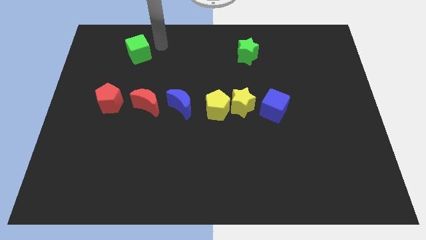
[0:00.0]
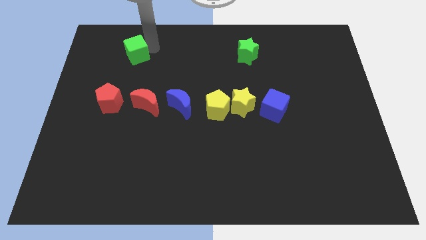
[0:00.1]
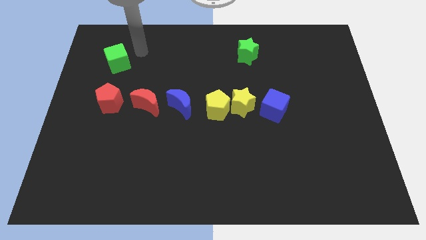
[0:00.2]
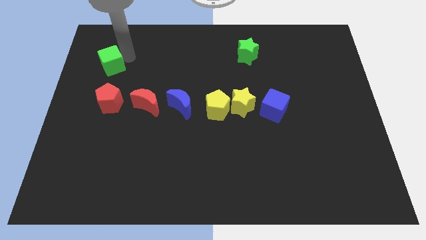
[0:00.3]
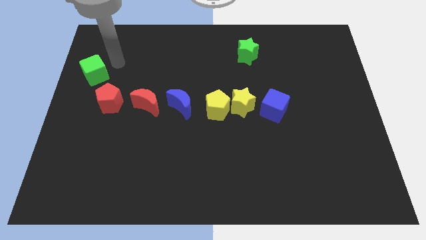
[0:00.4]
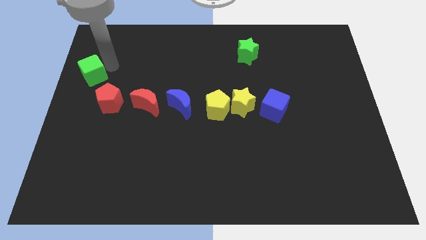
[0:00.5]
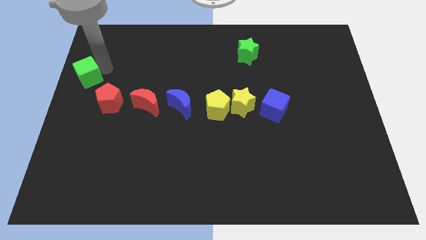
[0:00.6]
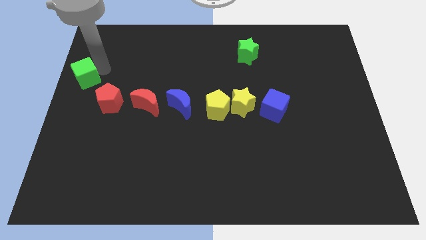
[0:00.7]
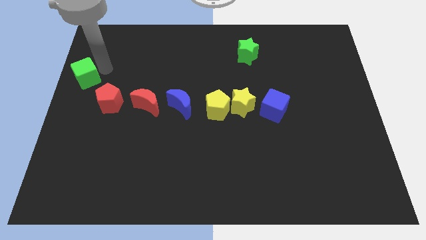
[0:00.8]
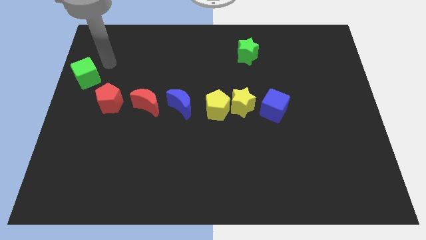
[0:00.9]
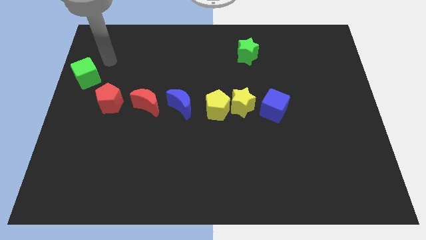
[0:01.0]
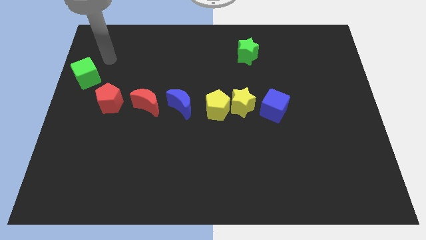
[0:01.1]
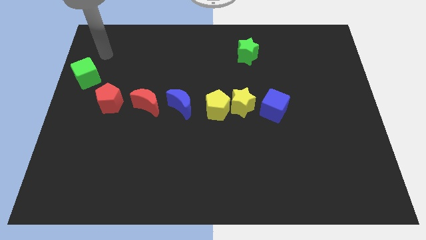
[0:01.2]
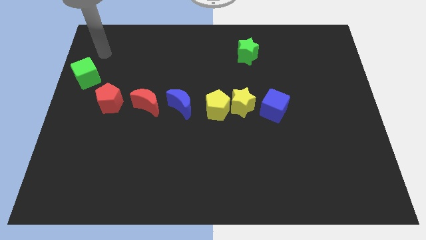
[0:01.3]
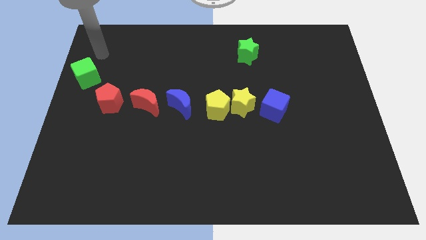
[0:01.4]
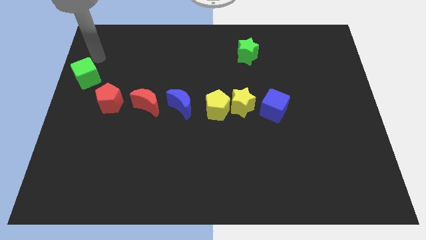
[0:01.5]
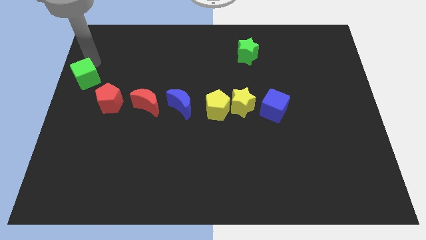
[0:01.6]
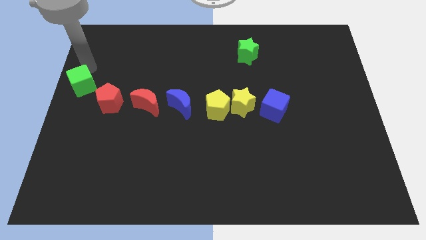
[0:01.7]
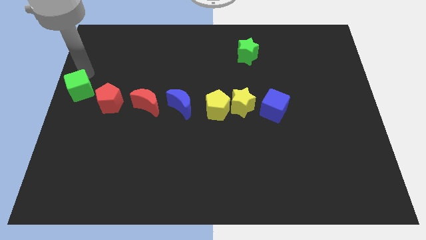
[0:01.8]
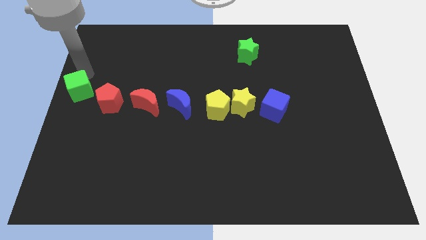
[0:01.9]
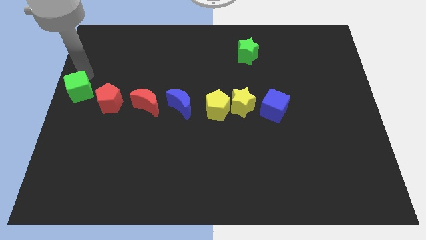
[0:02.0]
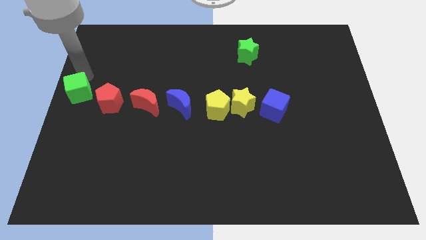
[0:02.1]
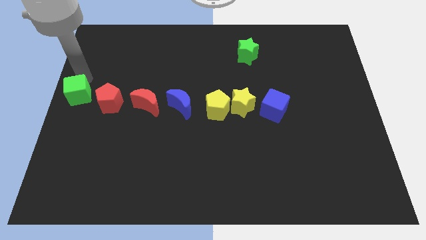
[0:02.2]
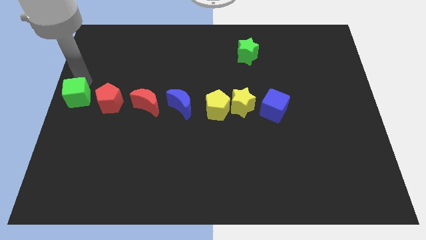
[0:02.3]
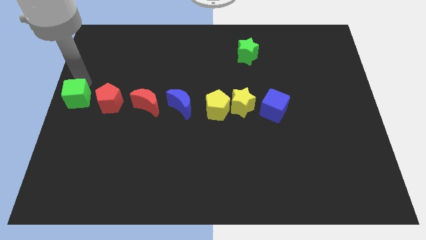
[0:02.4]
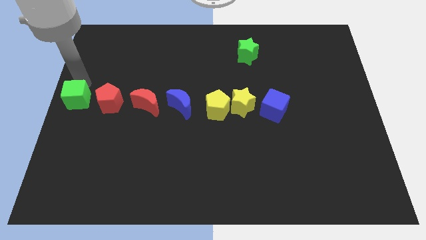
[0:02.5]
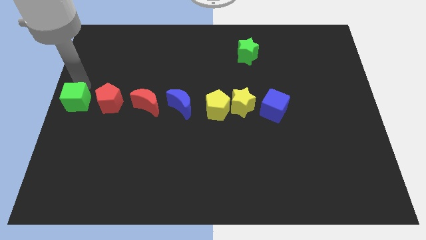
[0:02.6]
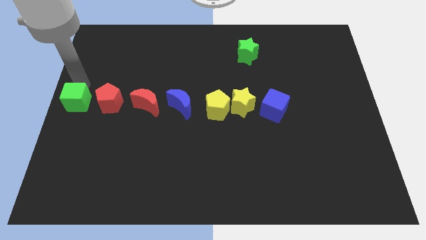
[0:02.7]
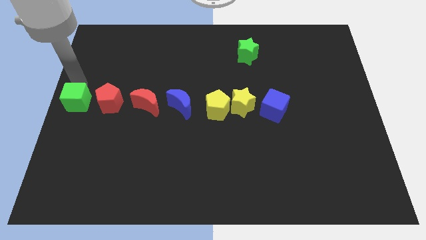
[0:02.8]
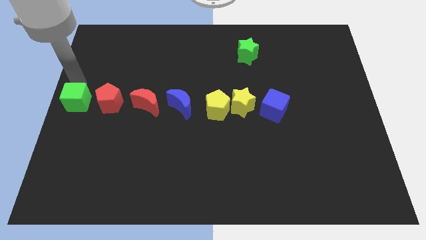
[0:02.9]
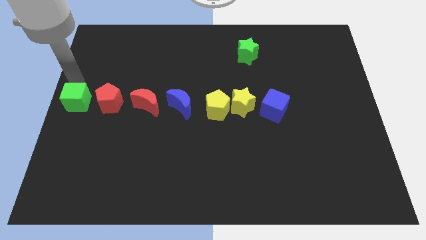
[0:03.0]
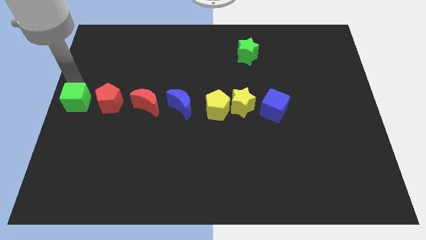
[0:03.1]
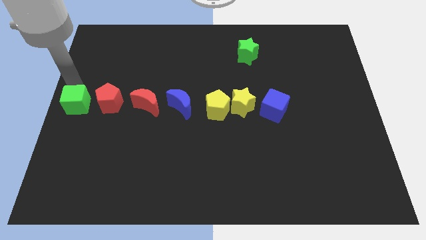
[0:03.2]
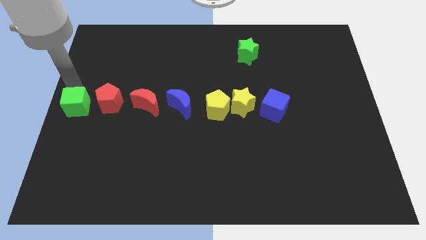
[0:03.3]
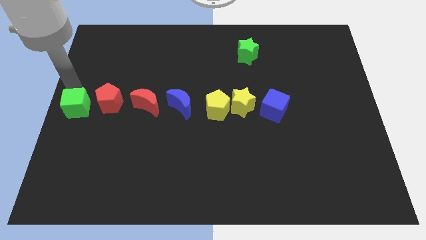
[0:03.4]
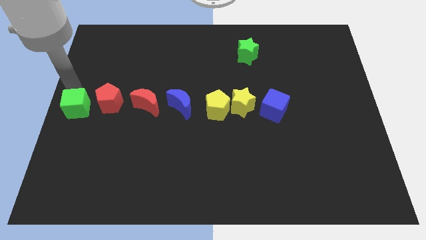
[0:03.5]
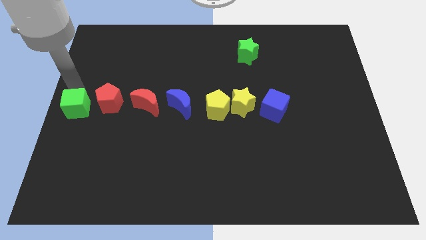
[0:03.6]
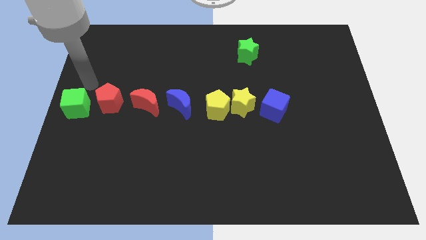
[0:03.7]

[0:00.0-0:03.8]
move the green cube towards the left center of the board

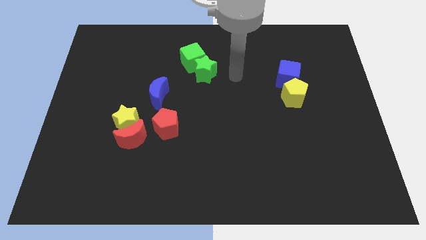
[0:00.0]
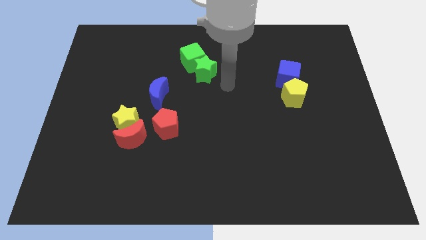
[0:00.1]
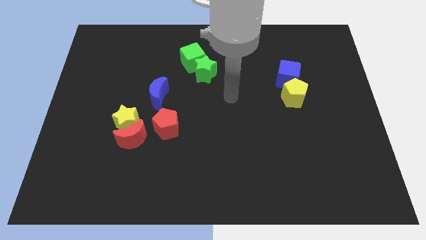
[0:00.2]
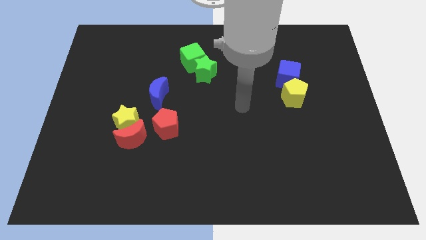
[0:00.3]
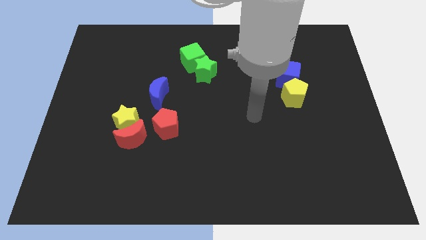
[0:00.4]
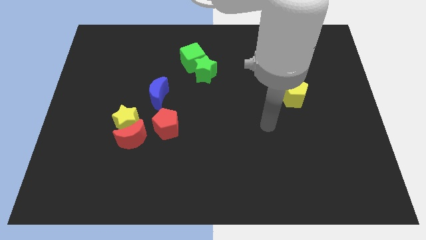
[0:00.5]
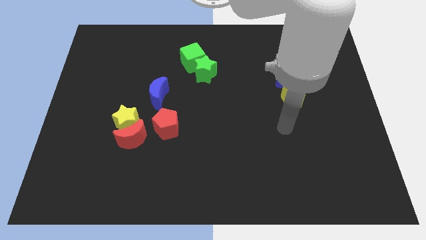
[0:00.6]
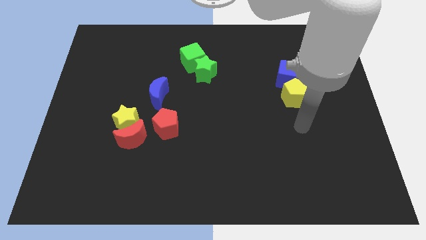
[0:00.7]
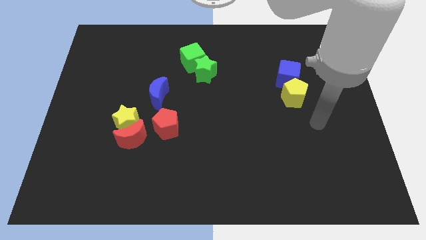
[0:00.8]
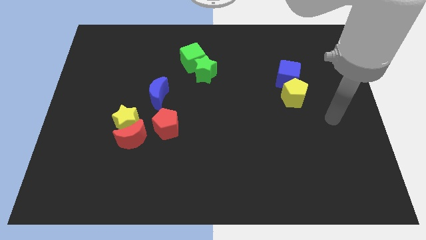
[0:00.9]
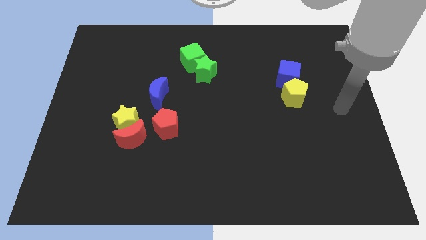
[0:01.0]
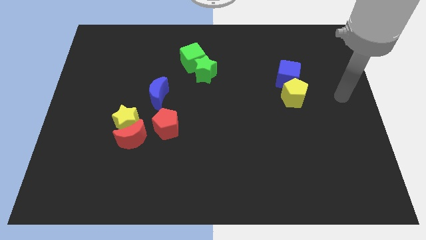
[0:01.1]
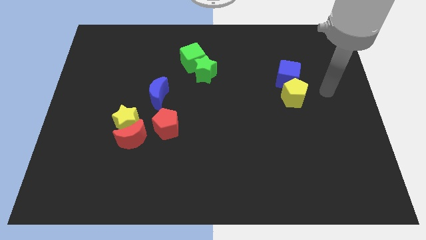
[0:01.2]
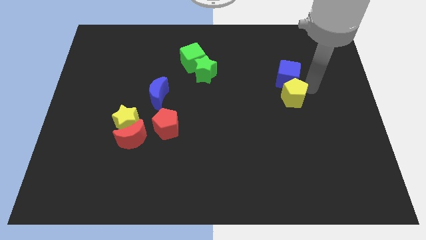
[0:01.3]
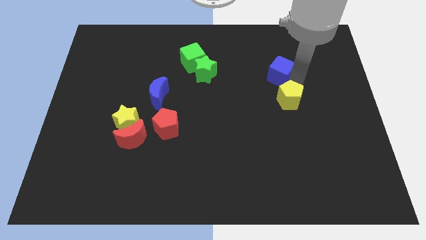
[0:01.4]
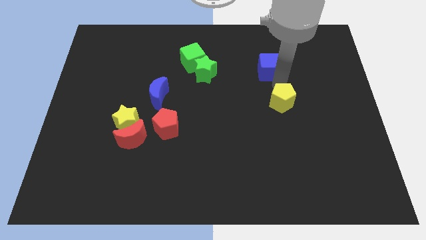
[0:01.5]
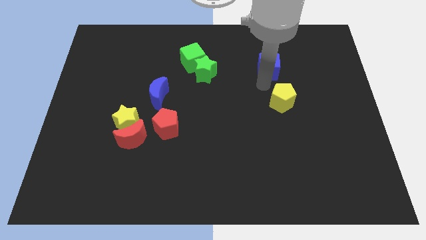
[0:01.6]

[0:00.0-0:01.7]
move the arm towards the yellow pentagon

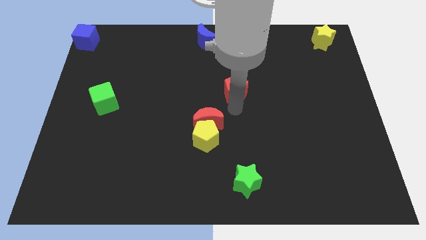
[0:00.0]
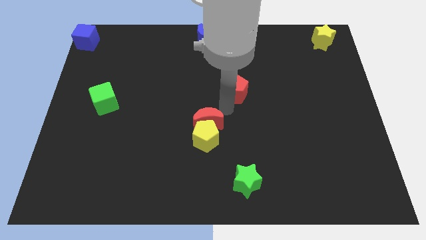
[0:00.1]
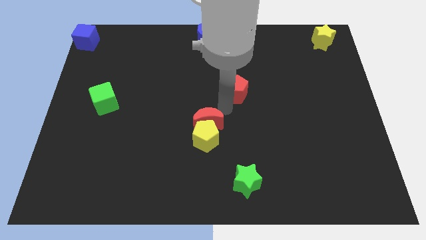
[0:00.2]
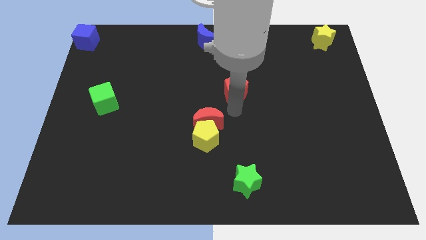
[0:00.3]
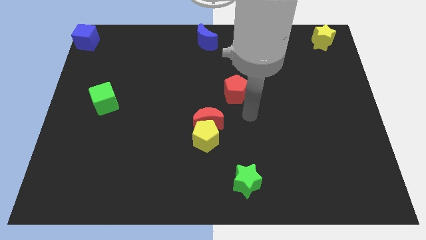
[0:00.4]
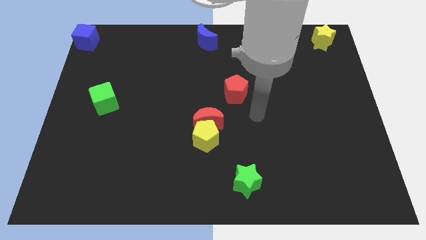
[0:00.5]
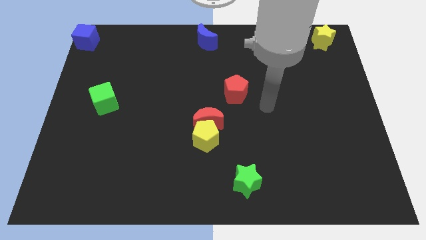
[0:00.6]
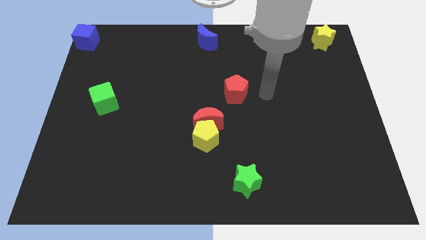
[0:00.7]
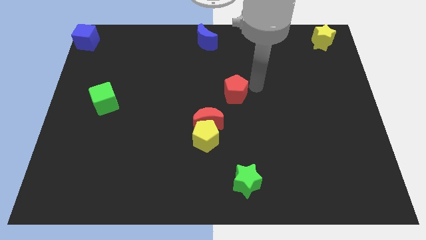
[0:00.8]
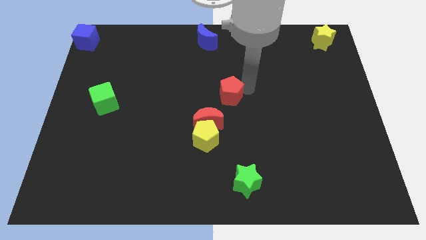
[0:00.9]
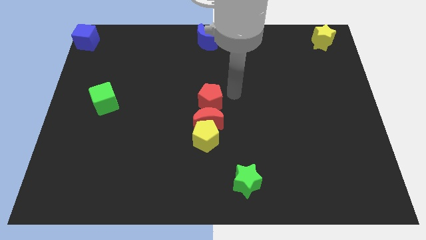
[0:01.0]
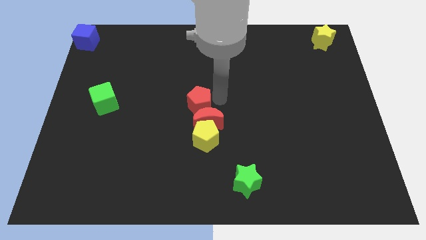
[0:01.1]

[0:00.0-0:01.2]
place the red pentagon above the red moon

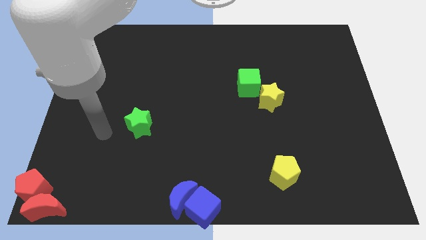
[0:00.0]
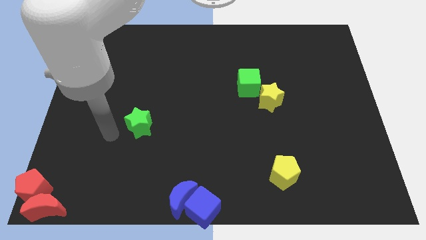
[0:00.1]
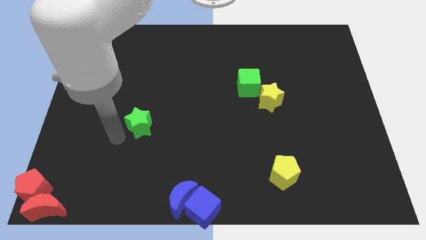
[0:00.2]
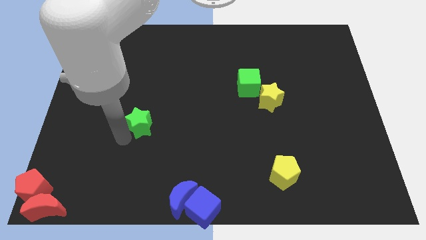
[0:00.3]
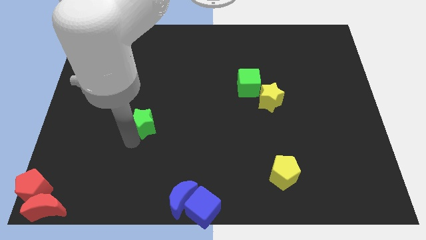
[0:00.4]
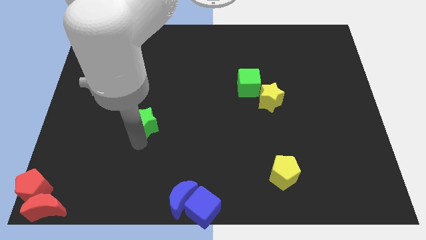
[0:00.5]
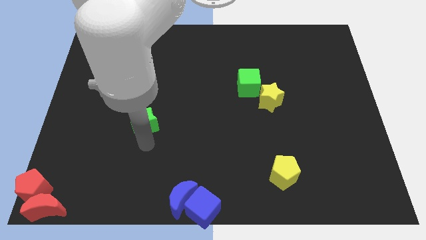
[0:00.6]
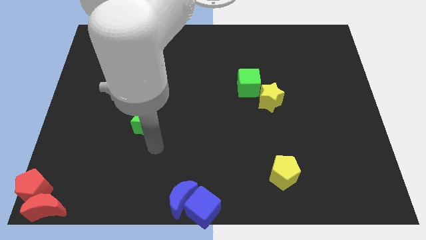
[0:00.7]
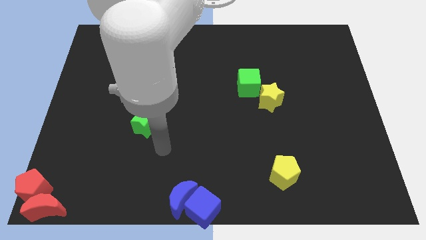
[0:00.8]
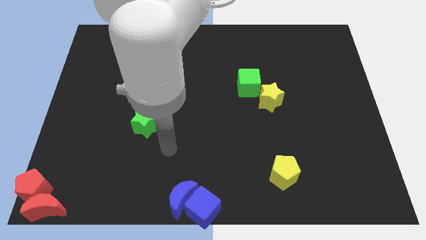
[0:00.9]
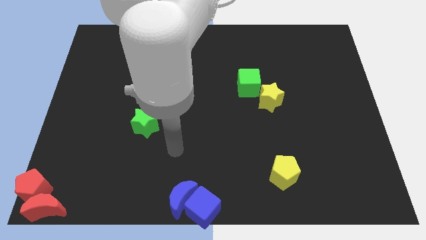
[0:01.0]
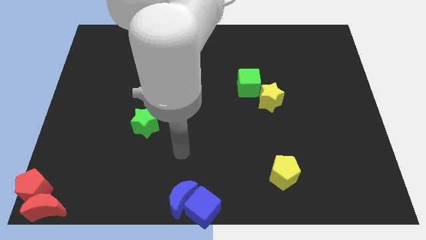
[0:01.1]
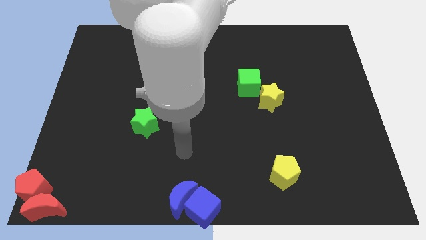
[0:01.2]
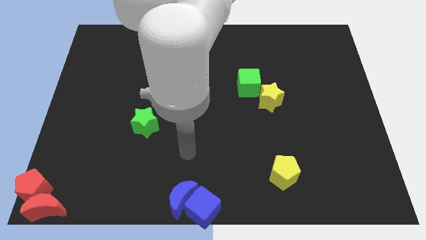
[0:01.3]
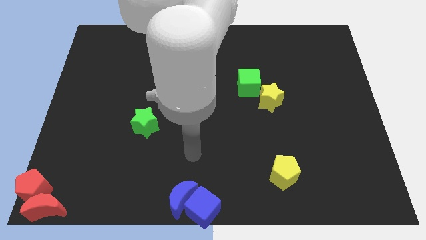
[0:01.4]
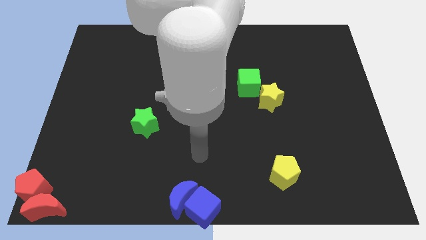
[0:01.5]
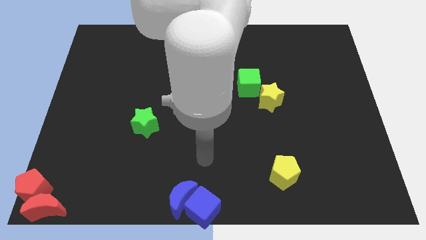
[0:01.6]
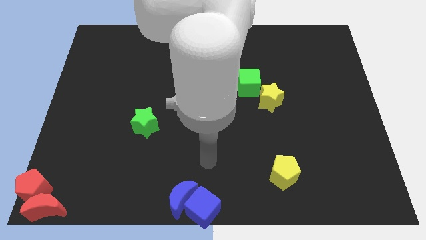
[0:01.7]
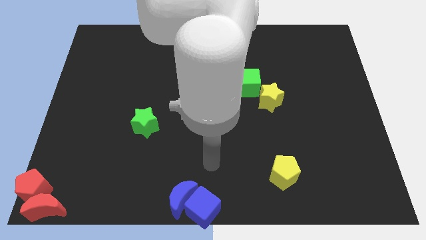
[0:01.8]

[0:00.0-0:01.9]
slightly push the green star towards the center of the board

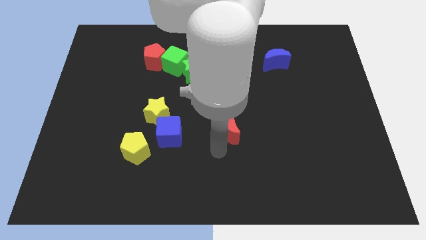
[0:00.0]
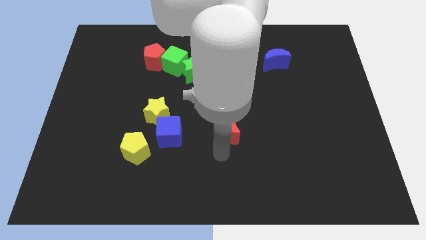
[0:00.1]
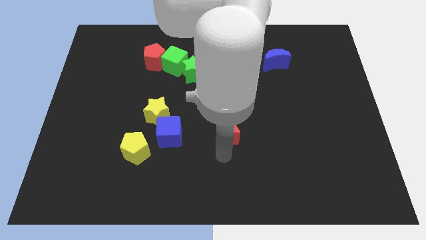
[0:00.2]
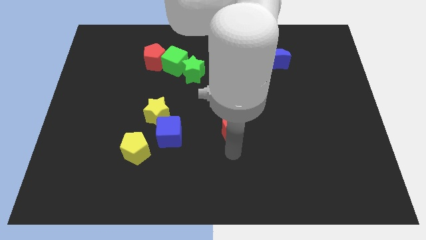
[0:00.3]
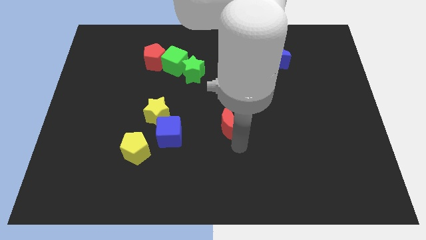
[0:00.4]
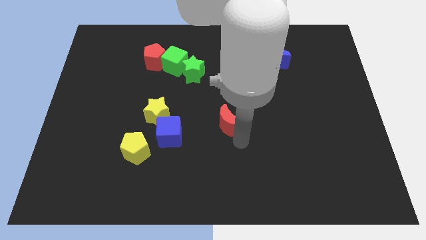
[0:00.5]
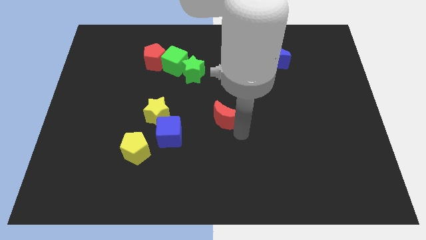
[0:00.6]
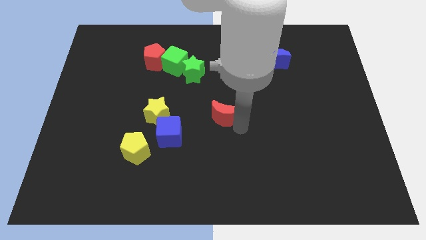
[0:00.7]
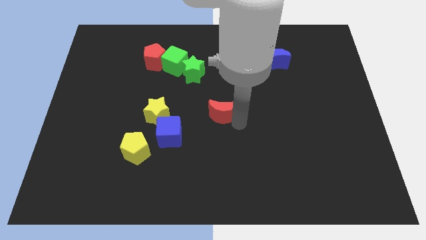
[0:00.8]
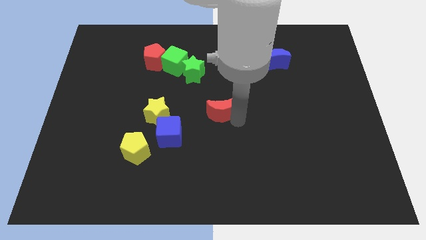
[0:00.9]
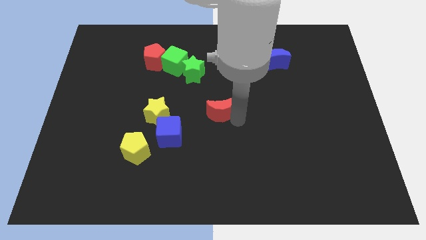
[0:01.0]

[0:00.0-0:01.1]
place red moon in the center
